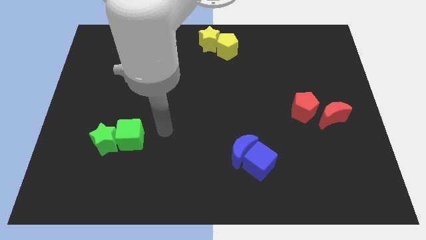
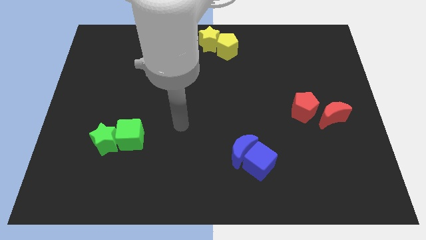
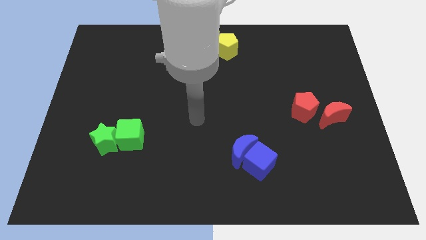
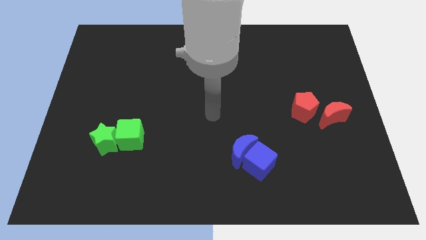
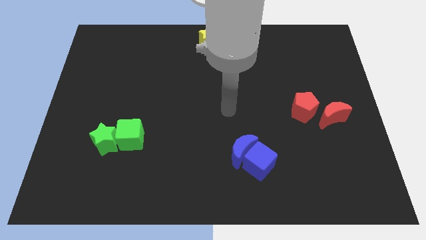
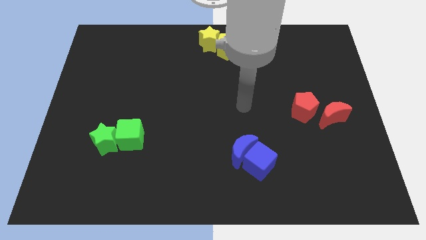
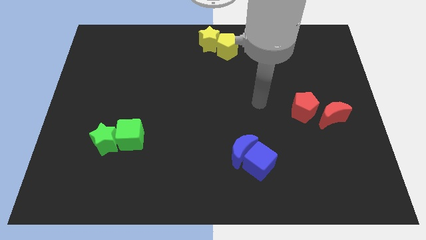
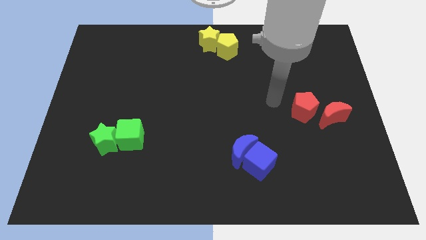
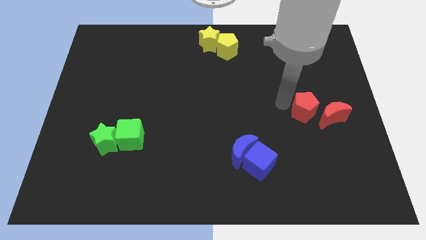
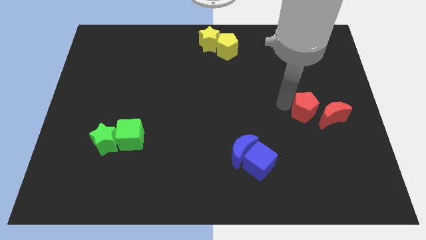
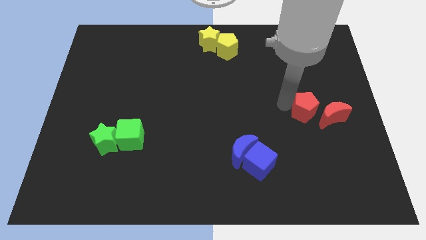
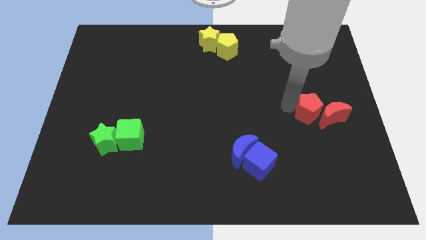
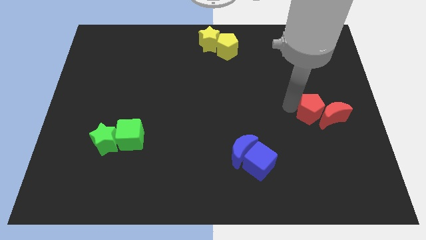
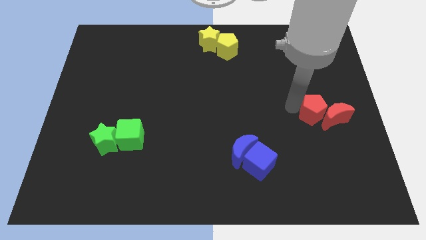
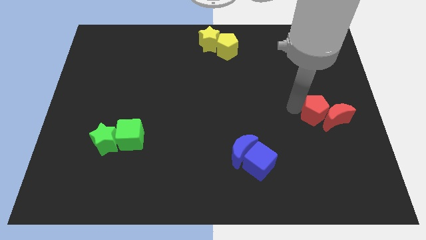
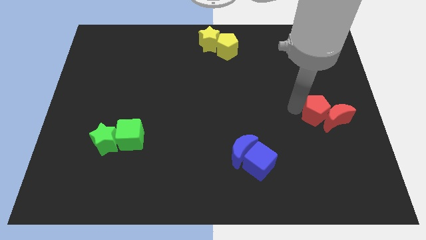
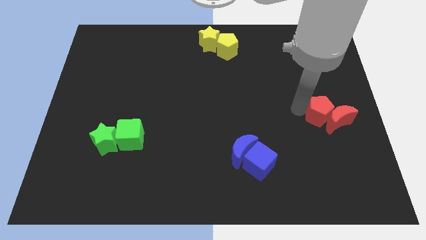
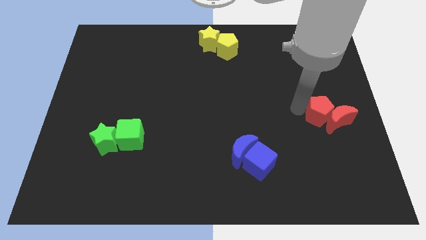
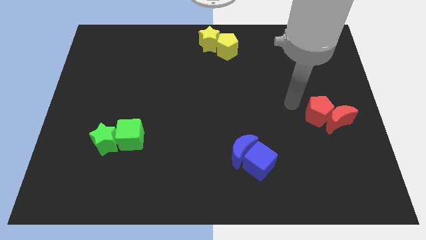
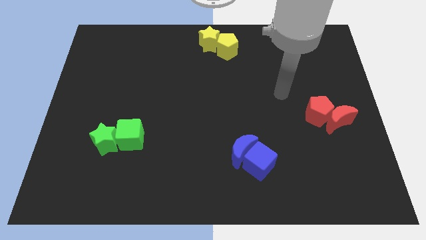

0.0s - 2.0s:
adjust the red pentagon

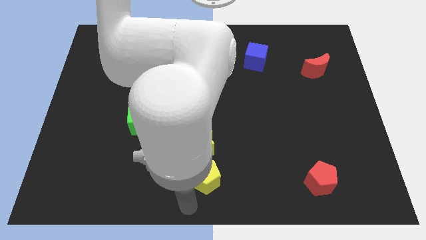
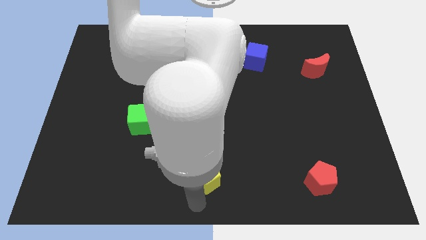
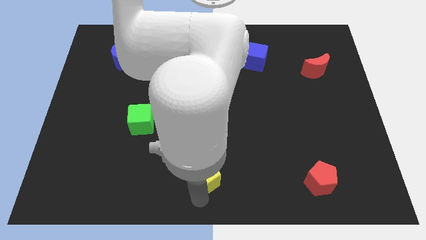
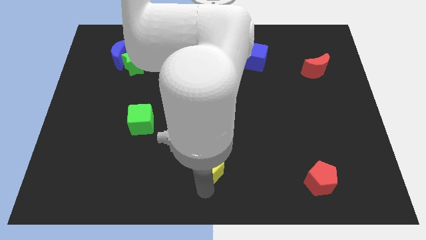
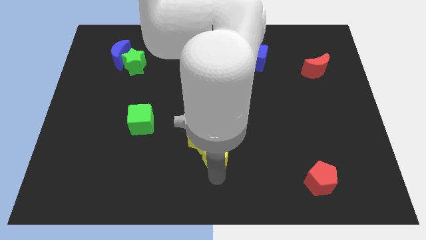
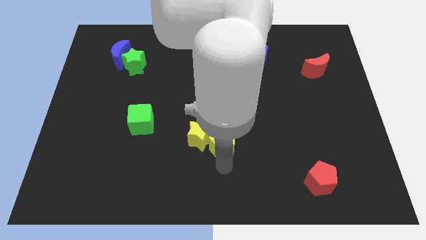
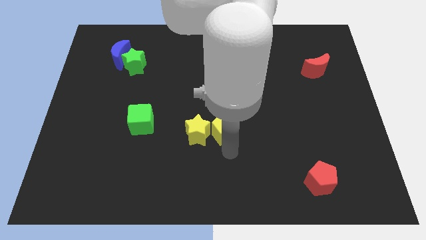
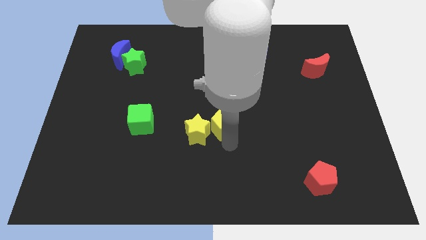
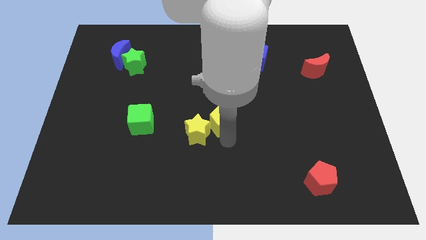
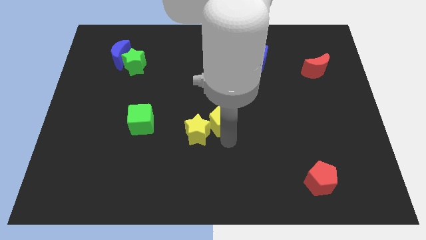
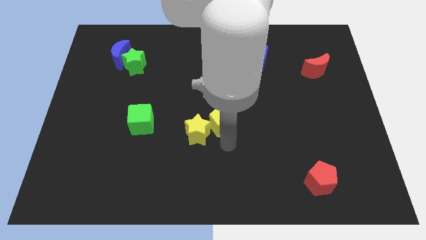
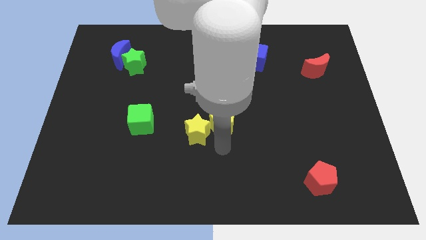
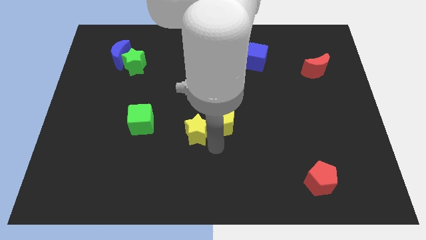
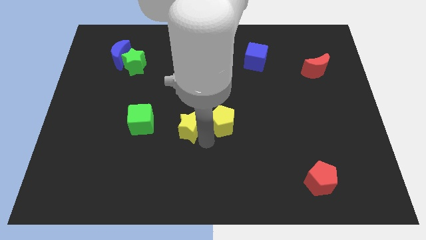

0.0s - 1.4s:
move the yellow pentagon slightly up

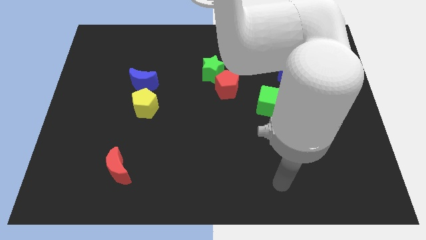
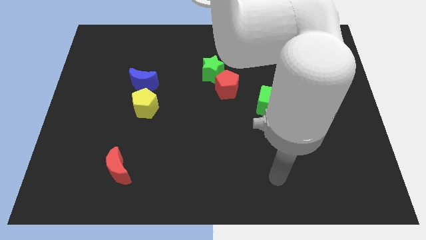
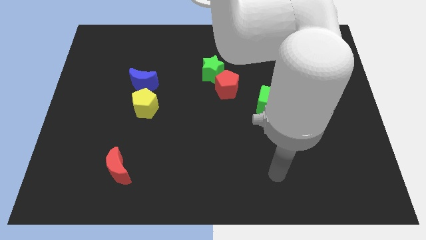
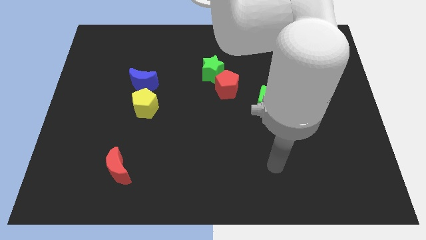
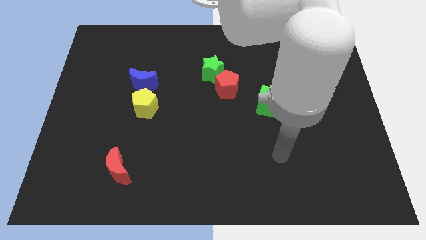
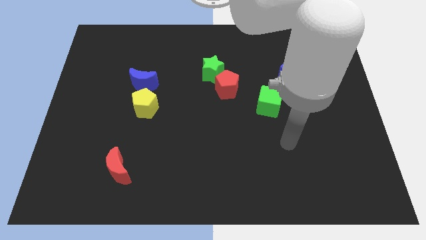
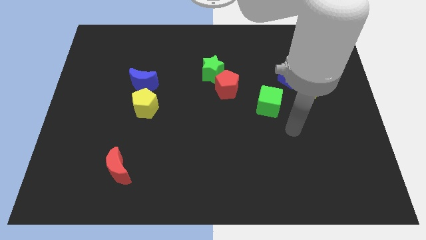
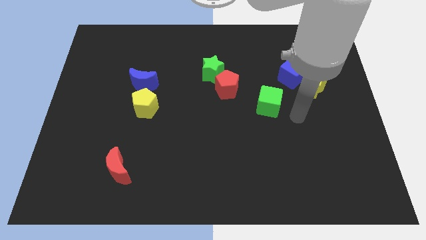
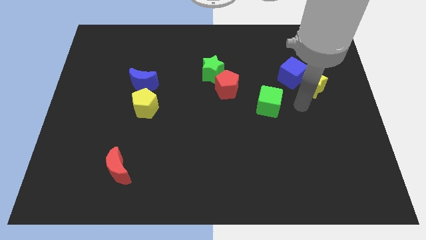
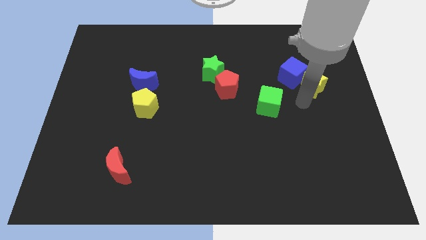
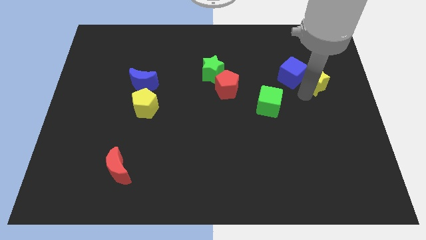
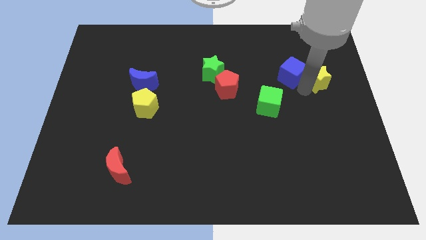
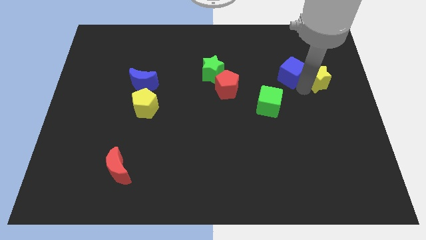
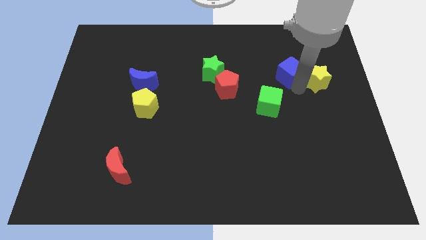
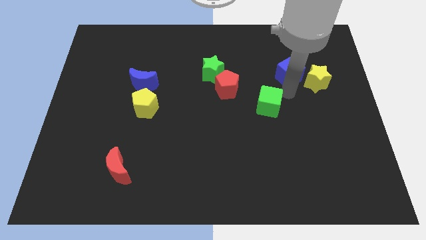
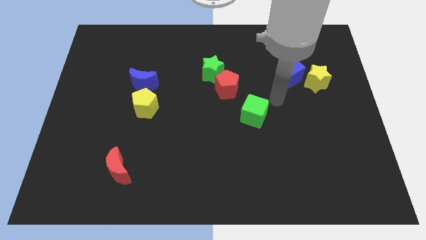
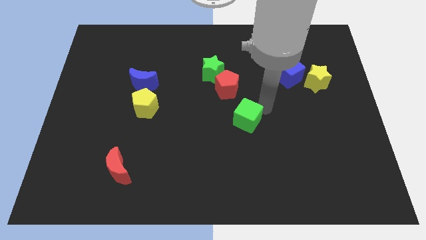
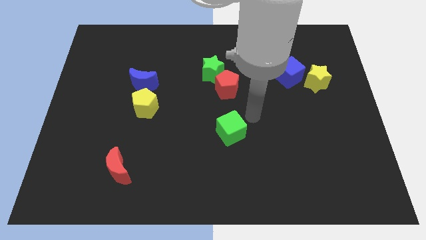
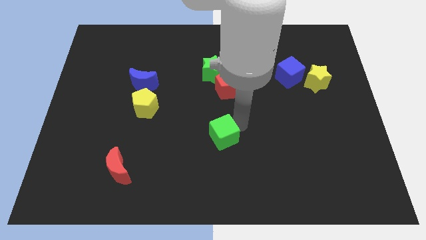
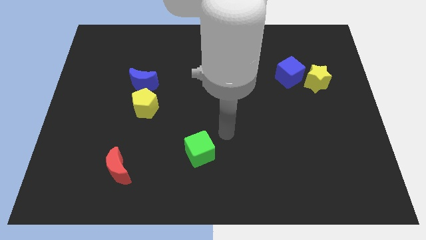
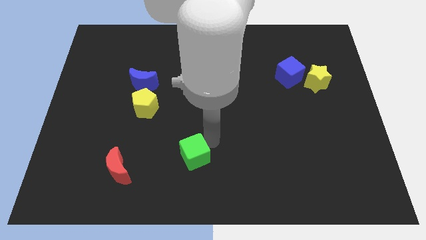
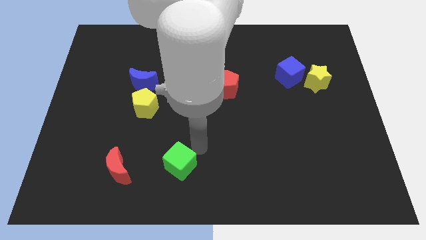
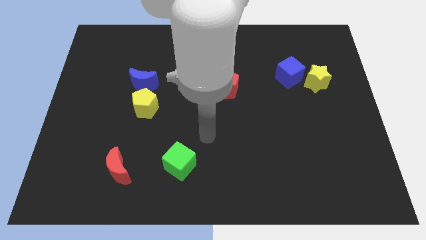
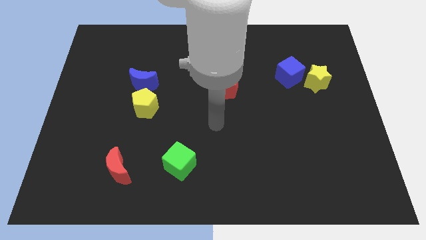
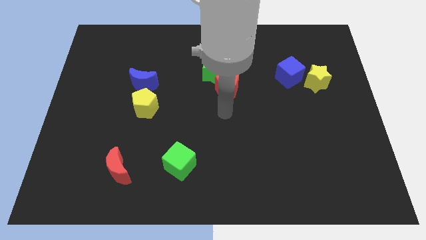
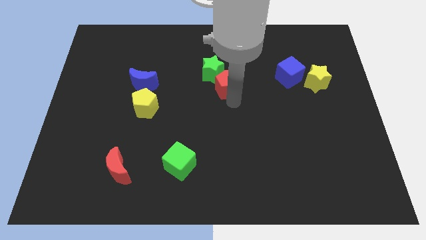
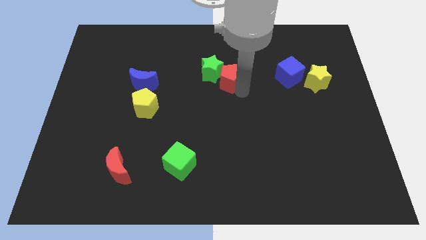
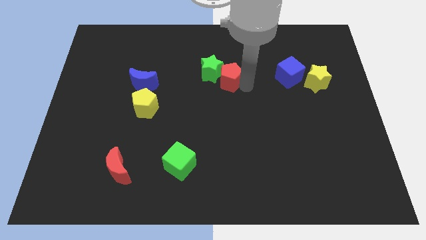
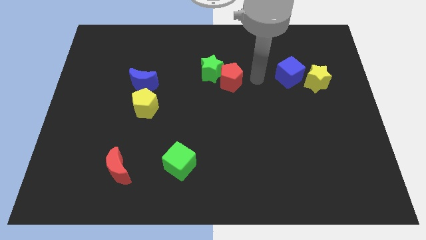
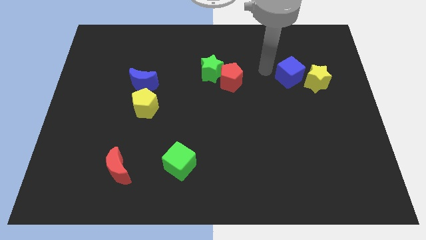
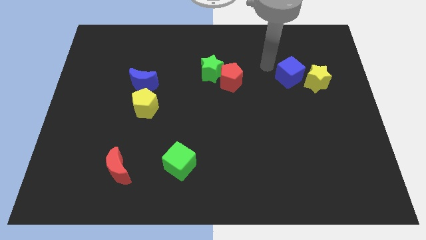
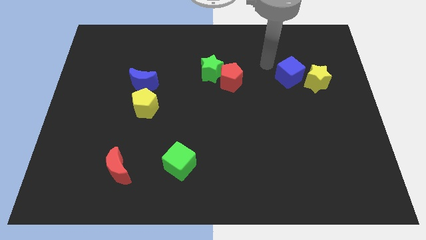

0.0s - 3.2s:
move the green cube horizontally to the right side of the red moon

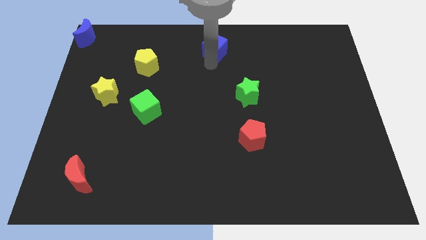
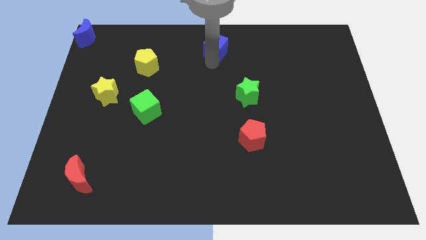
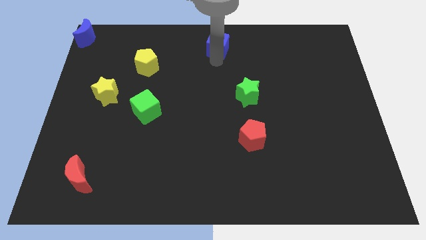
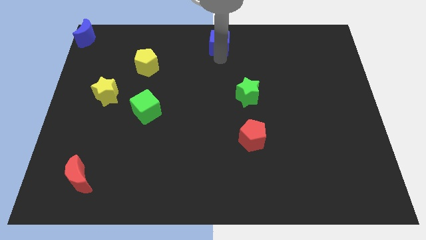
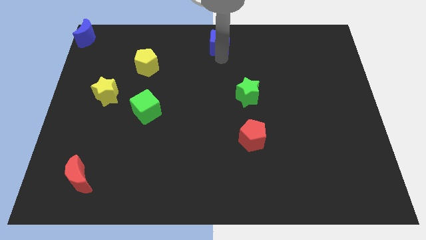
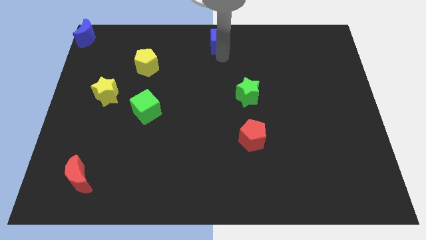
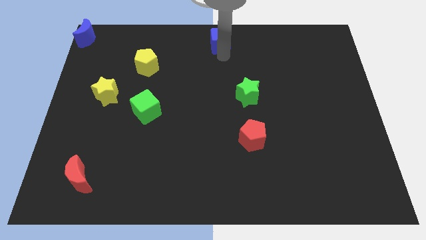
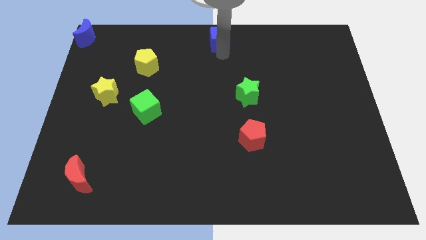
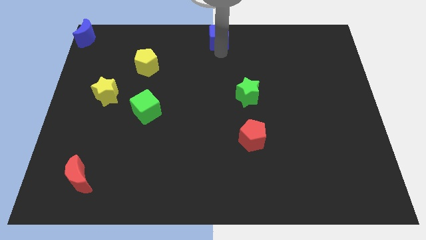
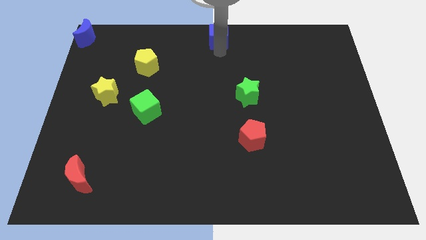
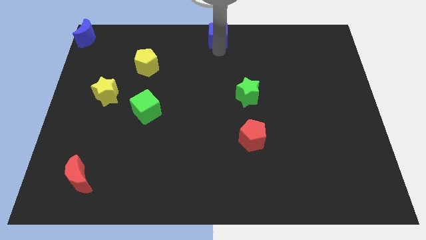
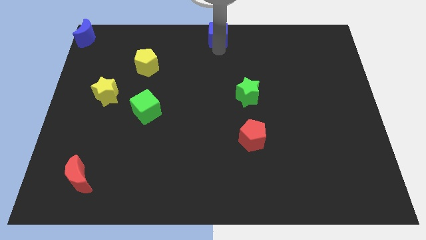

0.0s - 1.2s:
place the blue cube at the top center of the board

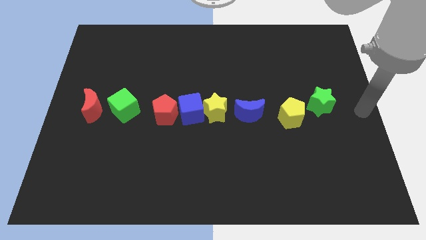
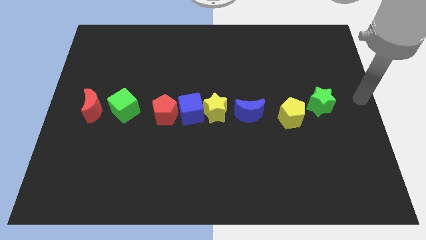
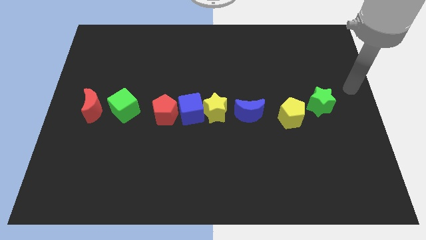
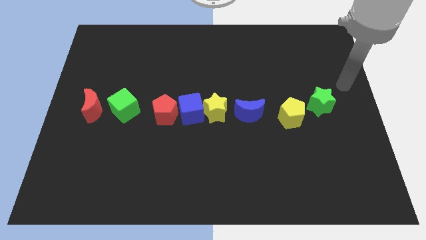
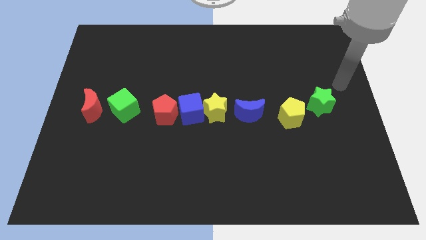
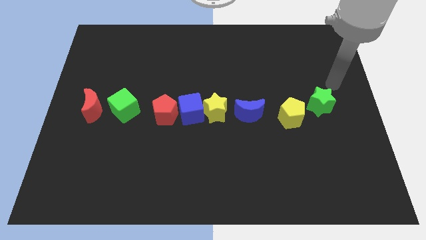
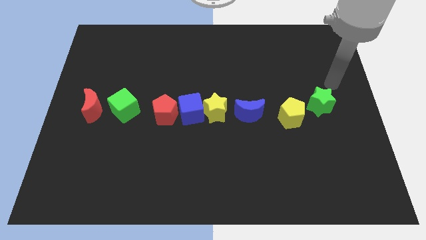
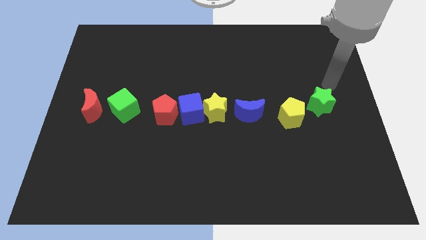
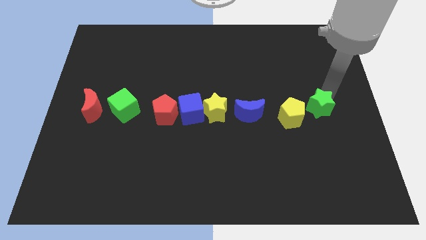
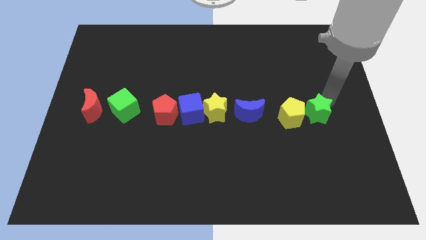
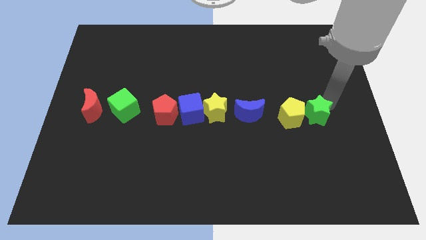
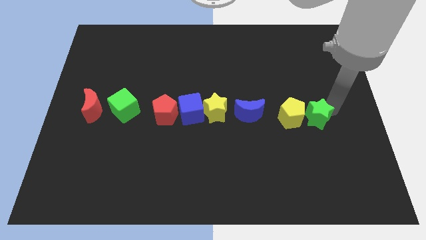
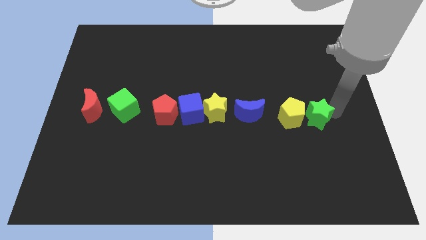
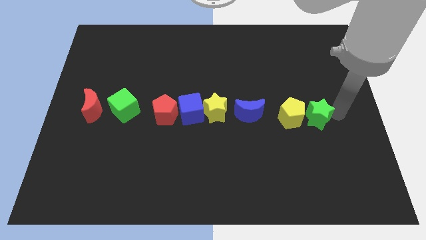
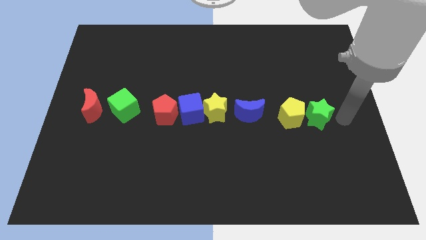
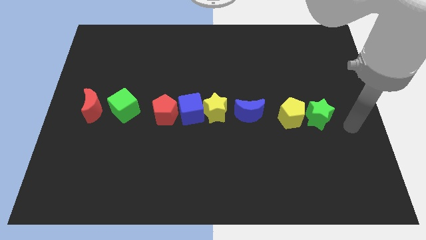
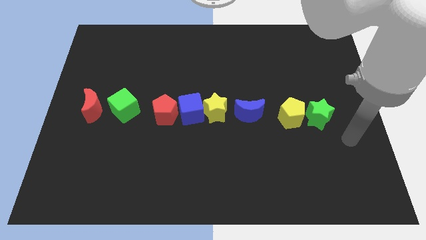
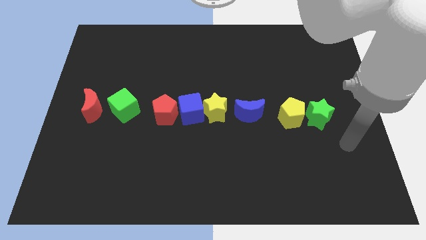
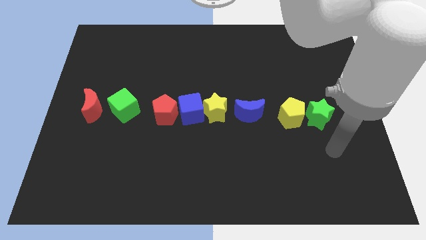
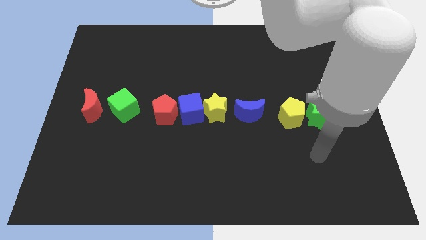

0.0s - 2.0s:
arrange all the blocks in a horizontal line
